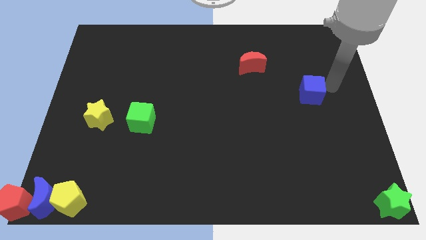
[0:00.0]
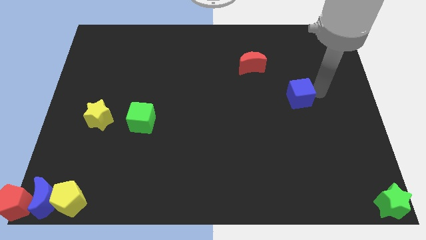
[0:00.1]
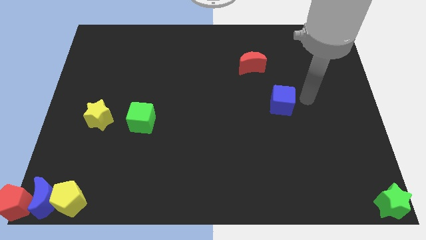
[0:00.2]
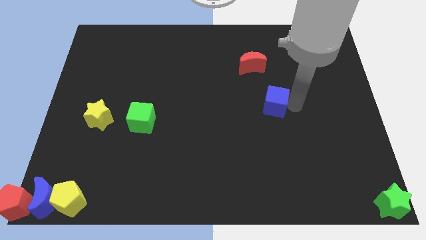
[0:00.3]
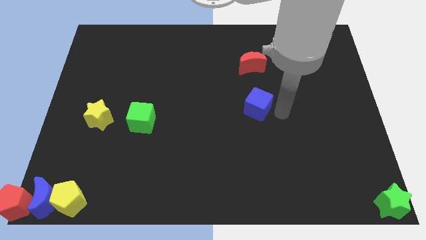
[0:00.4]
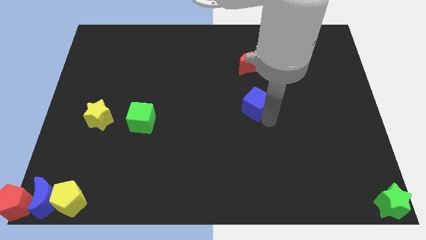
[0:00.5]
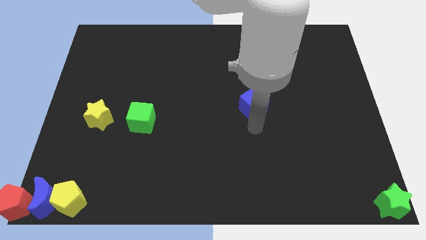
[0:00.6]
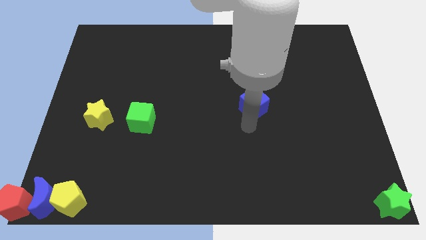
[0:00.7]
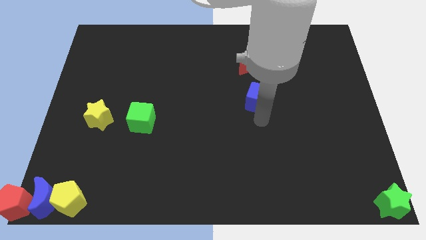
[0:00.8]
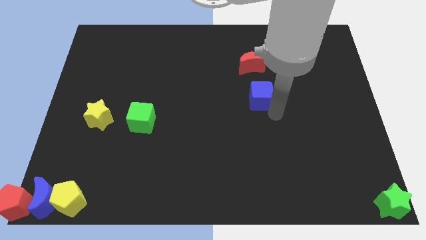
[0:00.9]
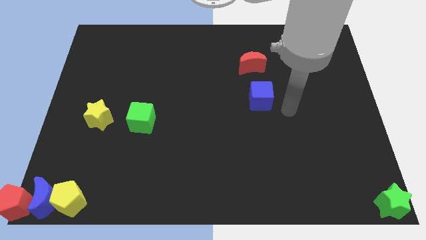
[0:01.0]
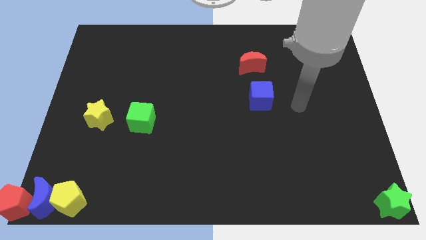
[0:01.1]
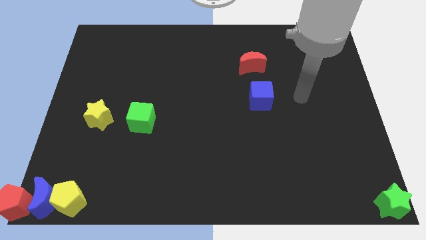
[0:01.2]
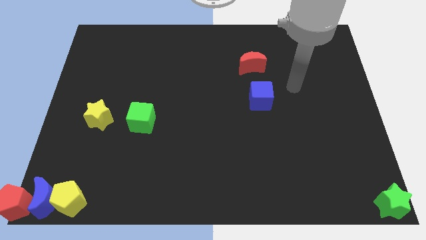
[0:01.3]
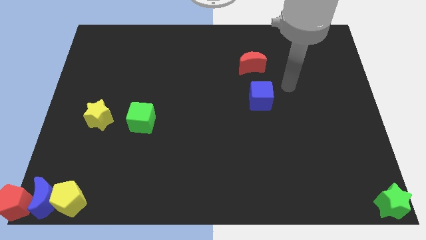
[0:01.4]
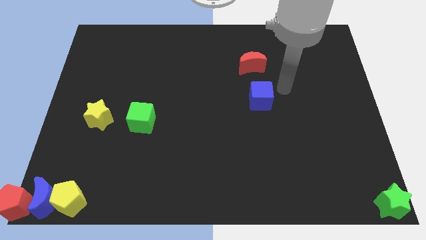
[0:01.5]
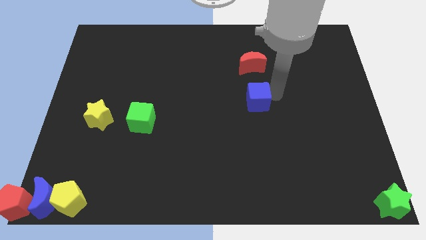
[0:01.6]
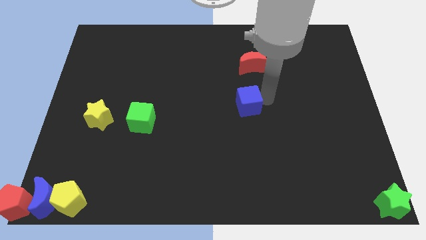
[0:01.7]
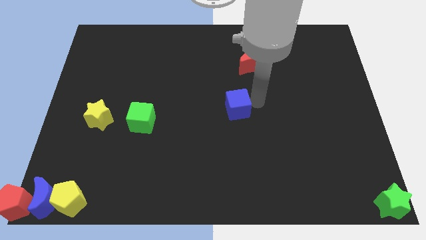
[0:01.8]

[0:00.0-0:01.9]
push the blue cube towards the center of the board

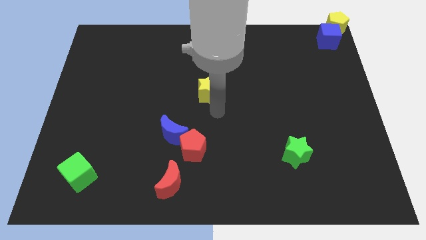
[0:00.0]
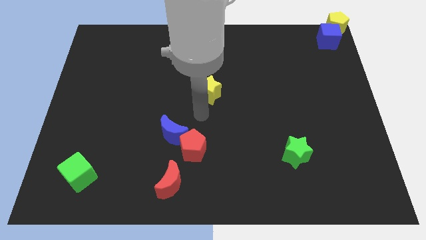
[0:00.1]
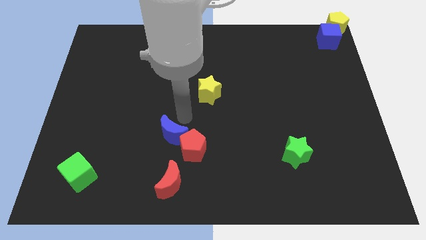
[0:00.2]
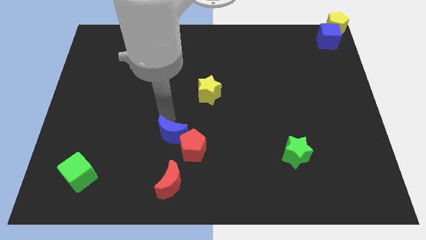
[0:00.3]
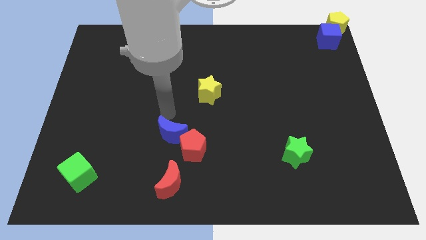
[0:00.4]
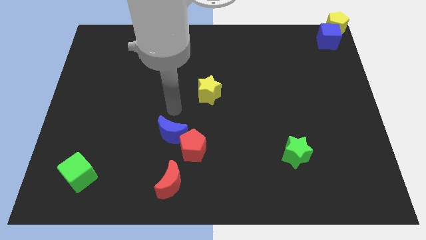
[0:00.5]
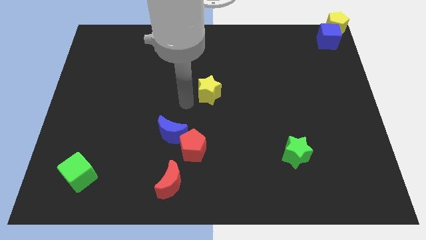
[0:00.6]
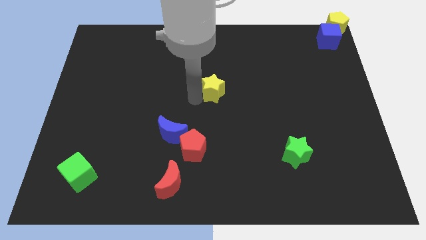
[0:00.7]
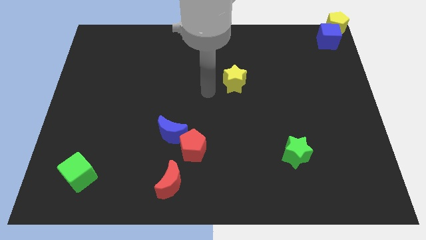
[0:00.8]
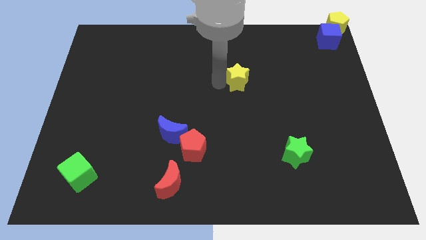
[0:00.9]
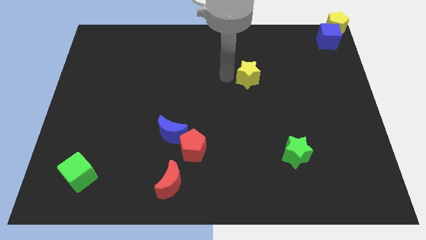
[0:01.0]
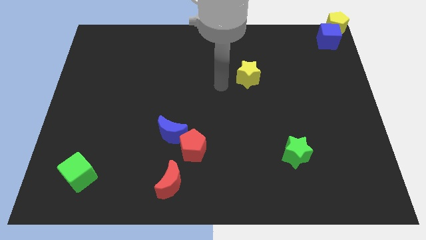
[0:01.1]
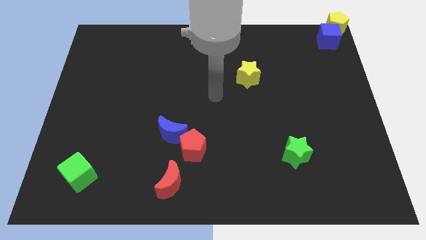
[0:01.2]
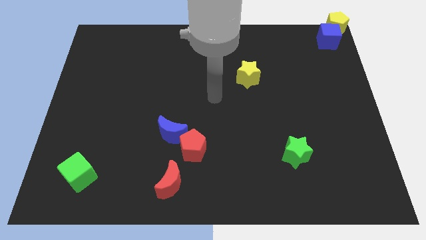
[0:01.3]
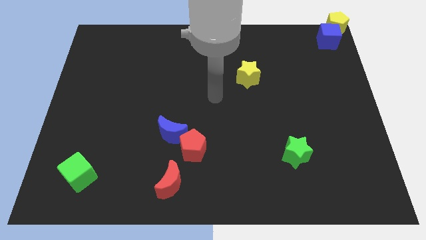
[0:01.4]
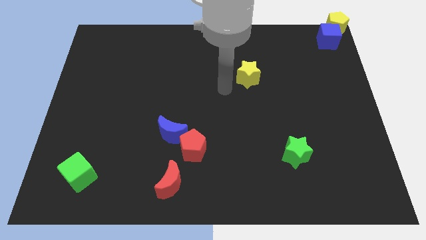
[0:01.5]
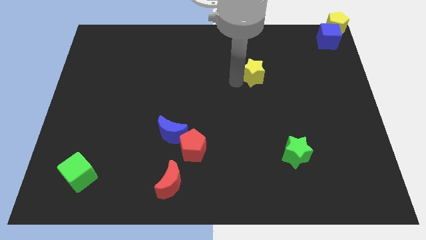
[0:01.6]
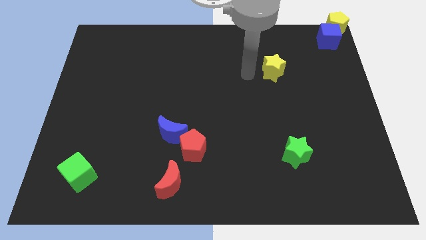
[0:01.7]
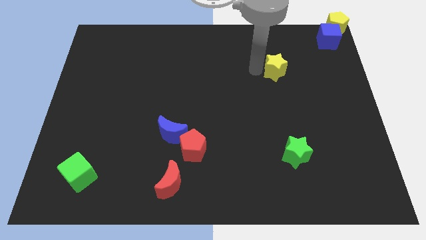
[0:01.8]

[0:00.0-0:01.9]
move the yellow star towards the blue cube

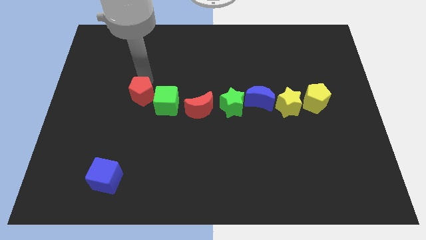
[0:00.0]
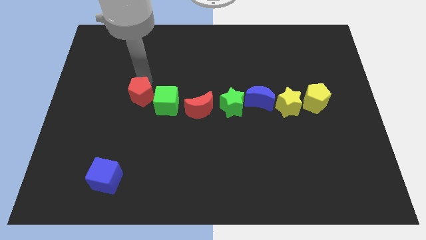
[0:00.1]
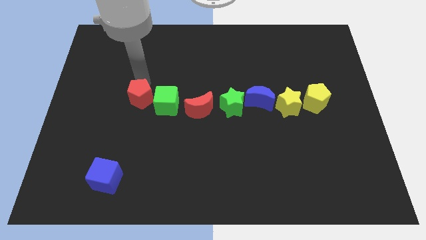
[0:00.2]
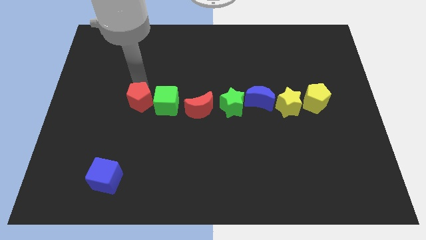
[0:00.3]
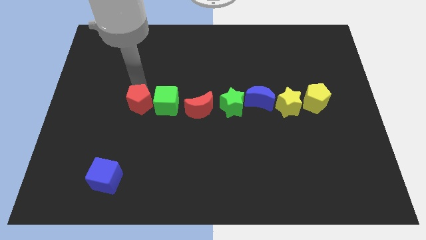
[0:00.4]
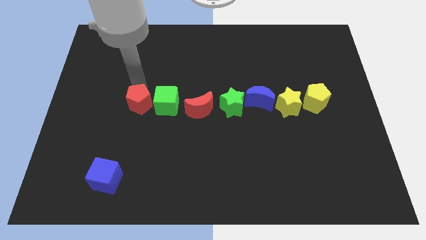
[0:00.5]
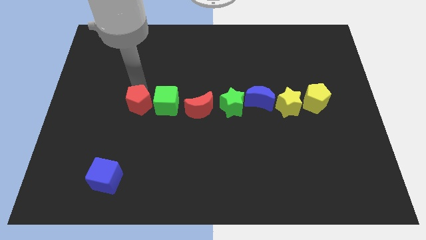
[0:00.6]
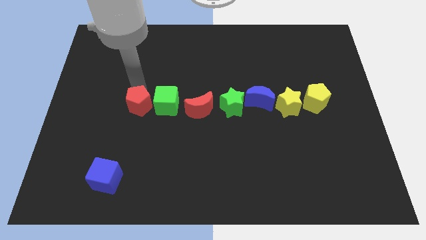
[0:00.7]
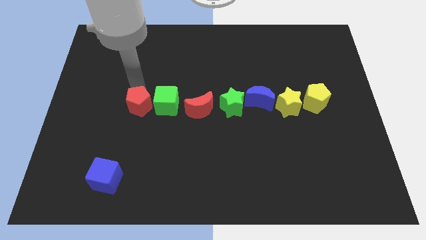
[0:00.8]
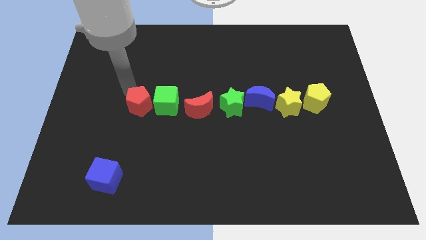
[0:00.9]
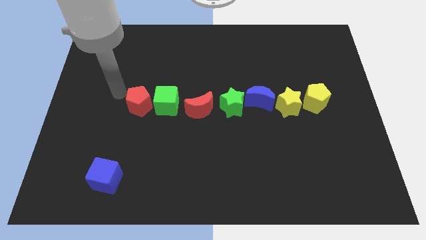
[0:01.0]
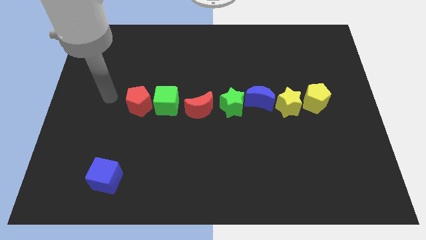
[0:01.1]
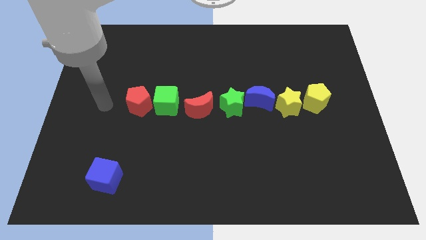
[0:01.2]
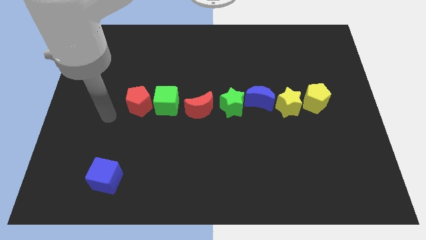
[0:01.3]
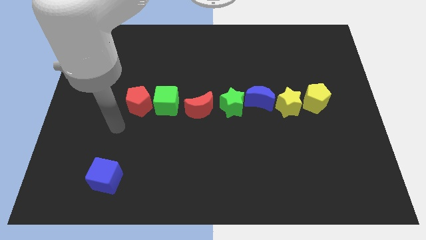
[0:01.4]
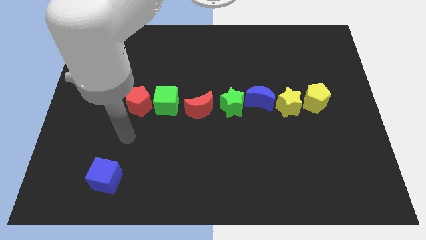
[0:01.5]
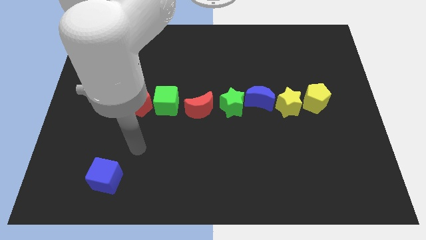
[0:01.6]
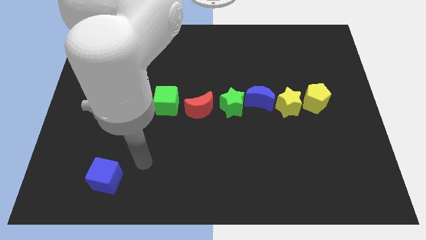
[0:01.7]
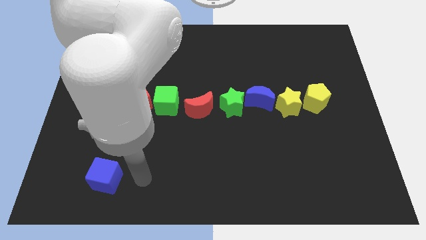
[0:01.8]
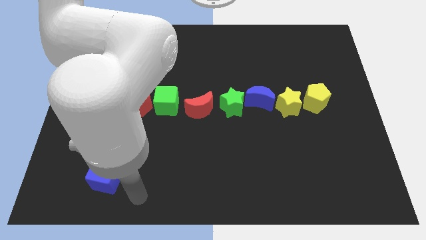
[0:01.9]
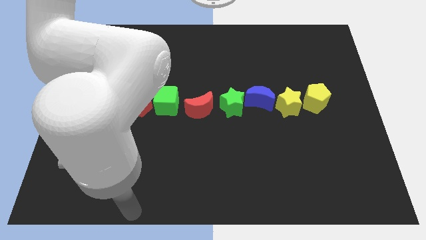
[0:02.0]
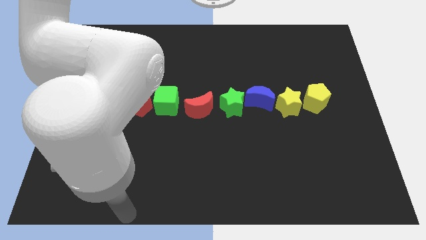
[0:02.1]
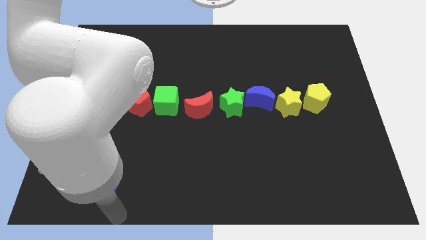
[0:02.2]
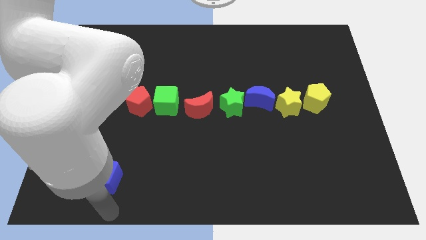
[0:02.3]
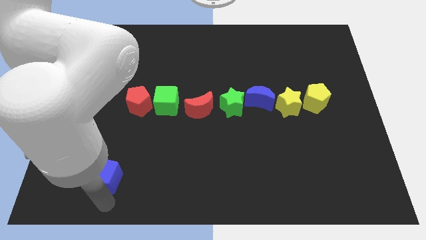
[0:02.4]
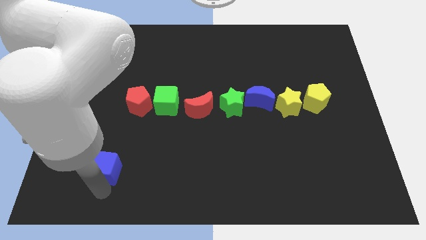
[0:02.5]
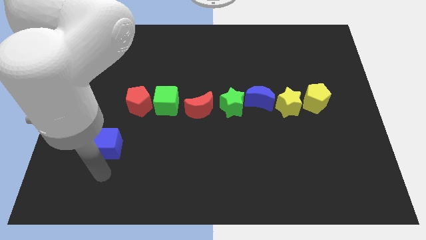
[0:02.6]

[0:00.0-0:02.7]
push blue cube slightly towards up

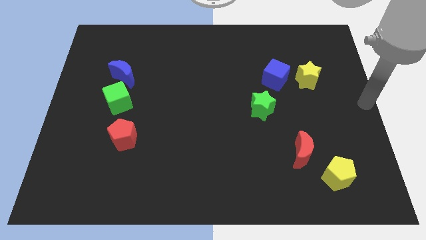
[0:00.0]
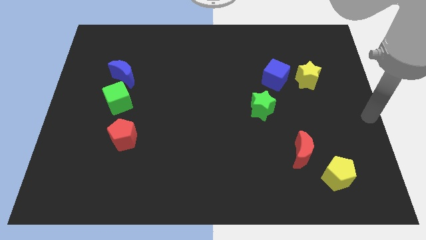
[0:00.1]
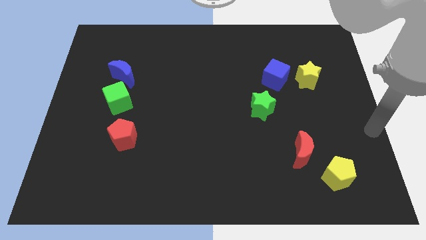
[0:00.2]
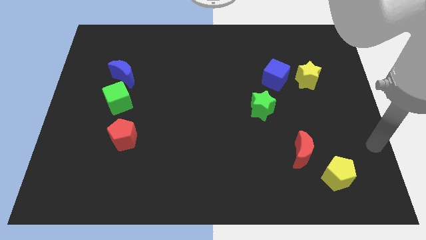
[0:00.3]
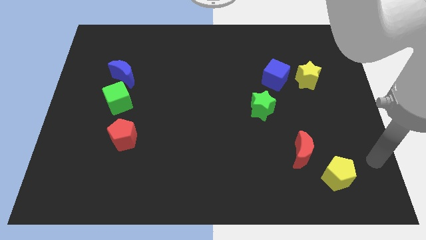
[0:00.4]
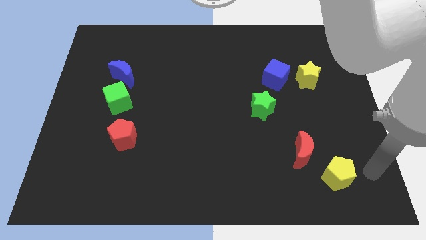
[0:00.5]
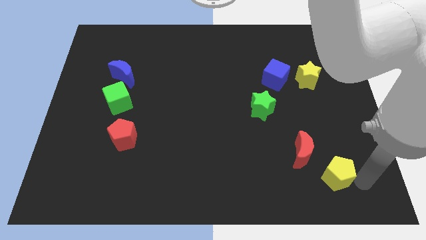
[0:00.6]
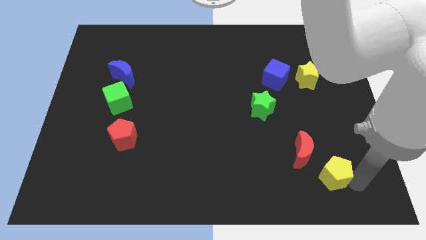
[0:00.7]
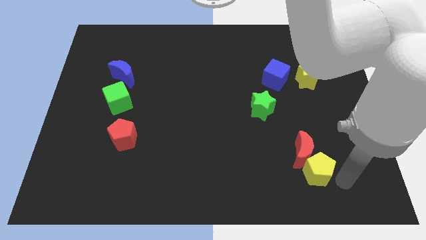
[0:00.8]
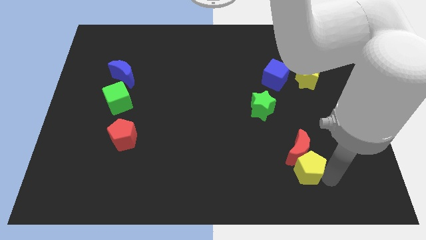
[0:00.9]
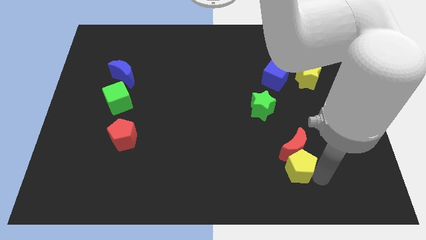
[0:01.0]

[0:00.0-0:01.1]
push yellow pentagon into red moon

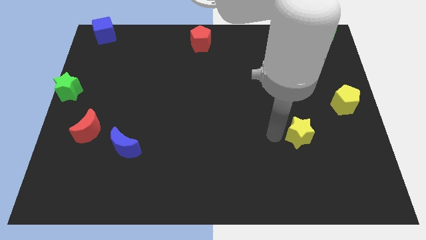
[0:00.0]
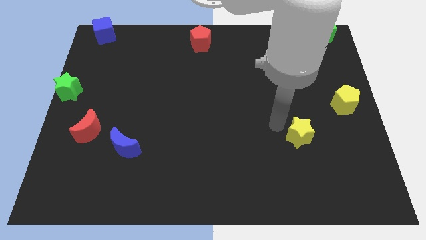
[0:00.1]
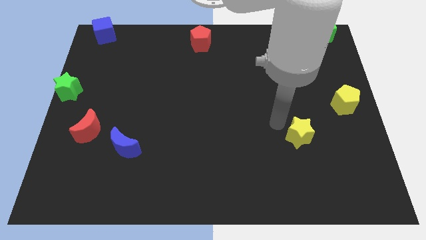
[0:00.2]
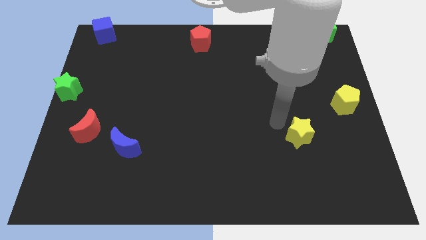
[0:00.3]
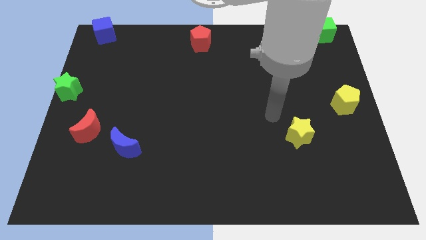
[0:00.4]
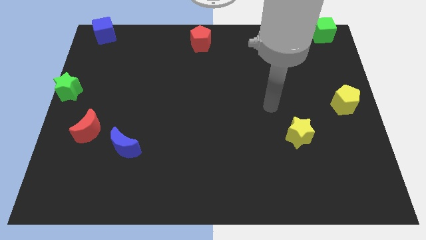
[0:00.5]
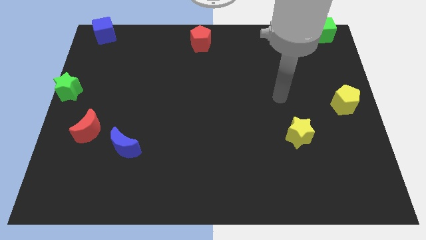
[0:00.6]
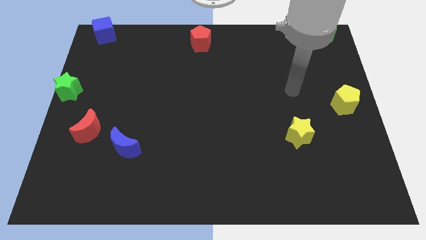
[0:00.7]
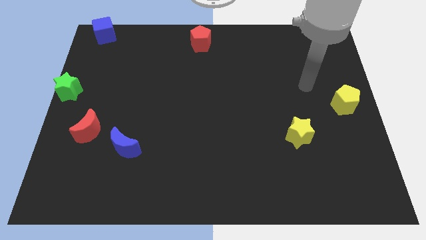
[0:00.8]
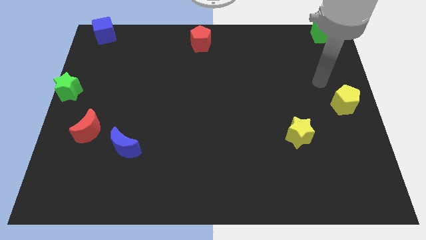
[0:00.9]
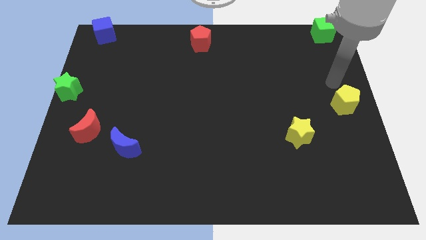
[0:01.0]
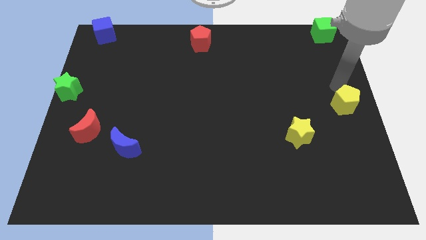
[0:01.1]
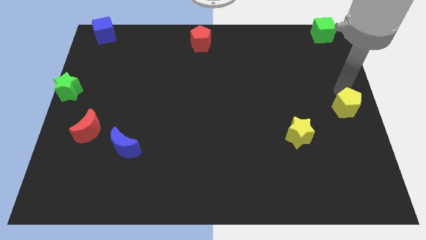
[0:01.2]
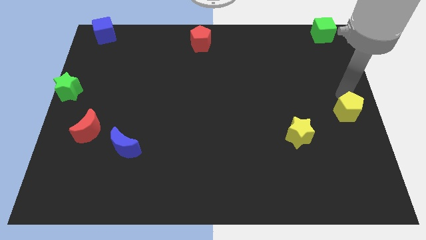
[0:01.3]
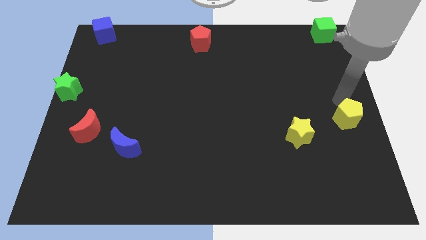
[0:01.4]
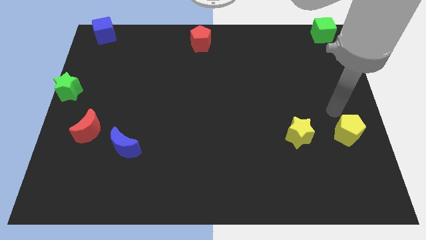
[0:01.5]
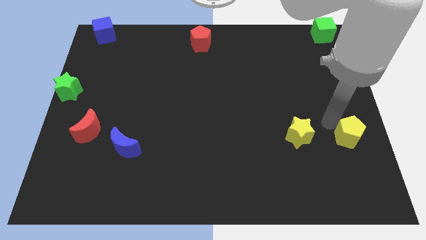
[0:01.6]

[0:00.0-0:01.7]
move the yellow pentagon to the right of the yellow star
